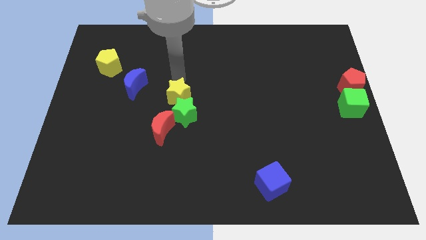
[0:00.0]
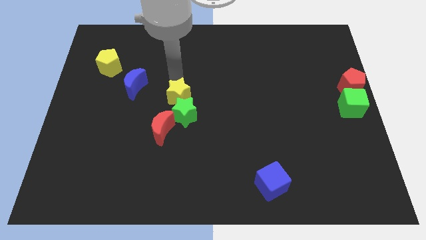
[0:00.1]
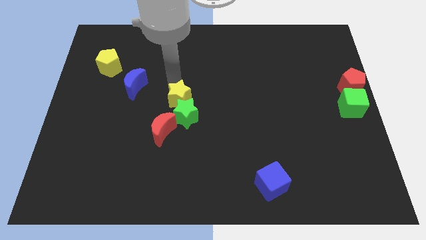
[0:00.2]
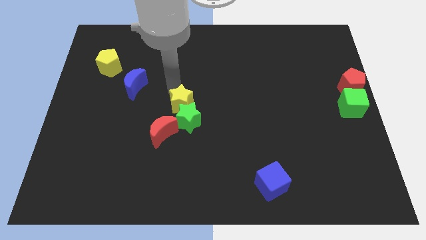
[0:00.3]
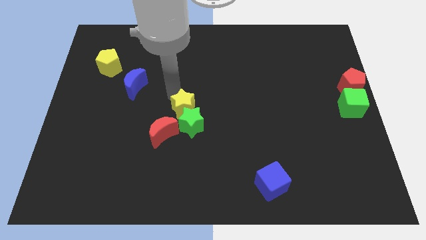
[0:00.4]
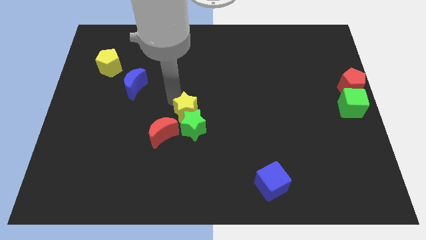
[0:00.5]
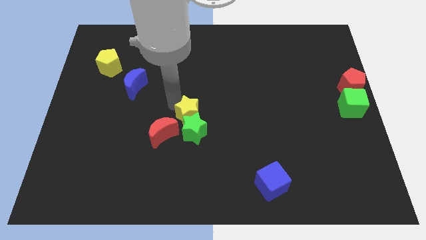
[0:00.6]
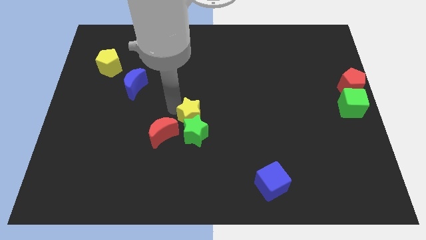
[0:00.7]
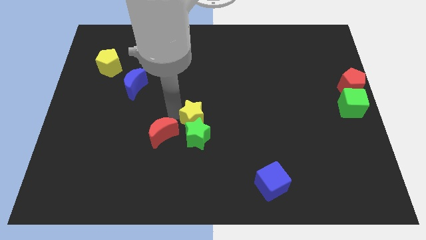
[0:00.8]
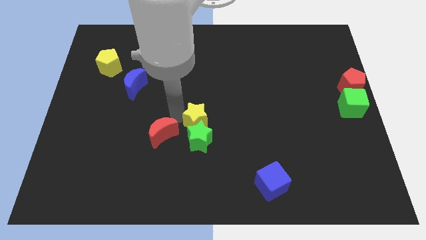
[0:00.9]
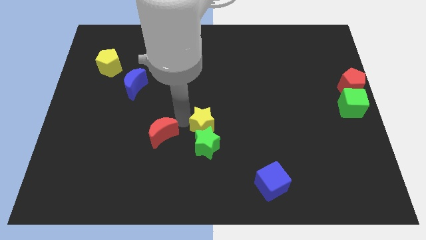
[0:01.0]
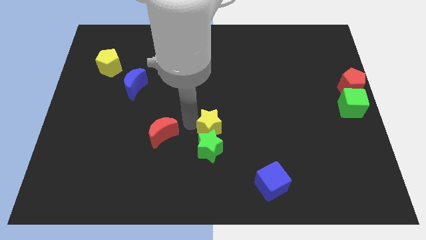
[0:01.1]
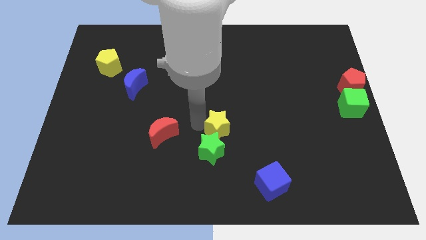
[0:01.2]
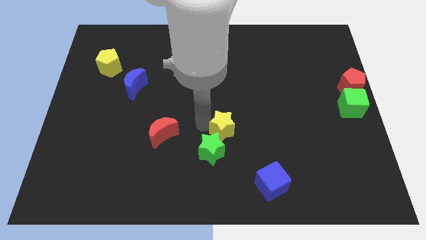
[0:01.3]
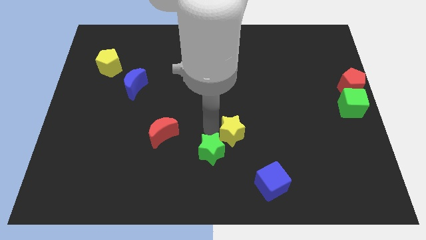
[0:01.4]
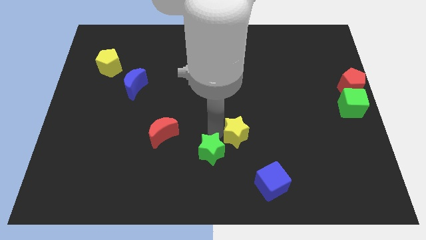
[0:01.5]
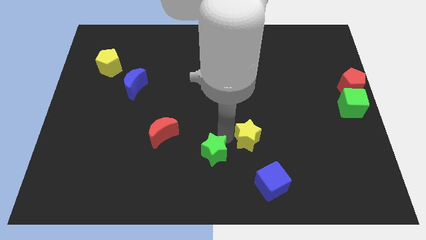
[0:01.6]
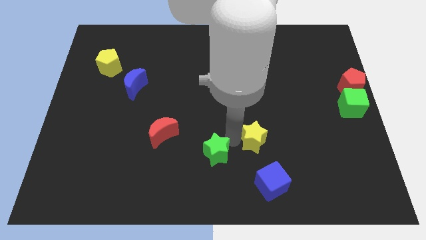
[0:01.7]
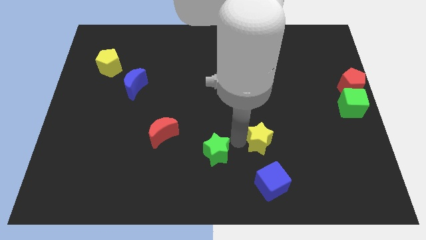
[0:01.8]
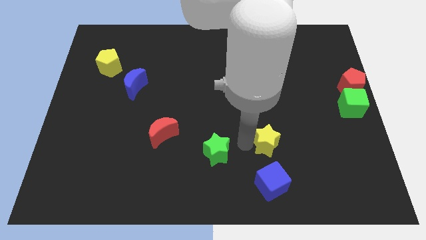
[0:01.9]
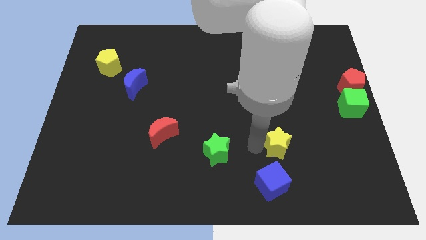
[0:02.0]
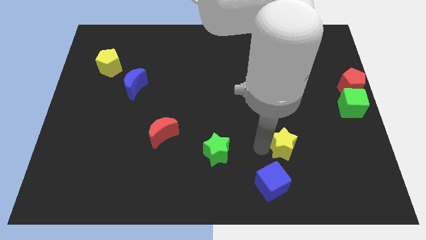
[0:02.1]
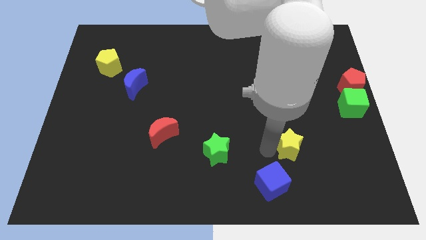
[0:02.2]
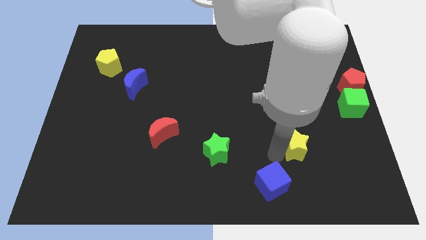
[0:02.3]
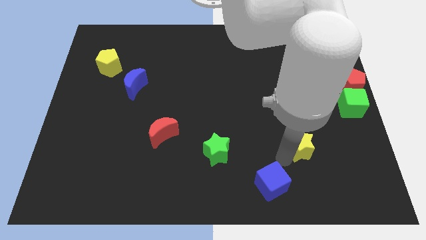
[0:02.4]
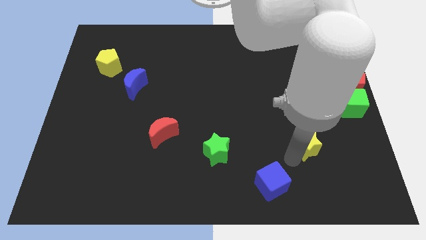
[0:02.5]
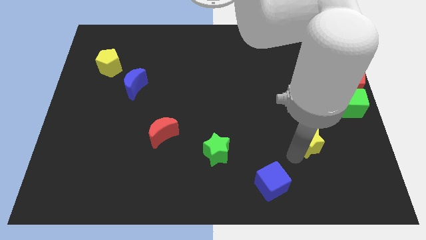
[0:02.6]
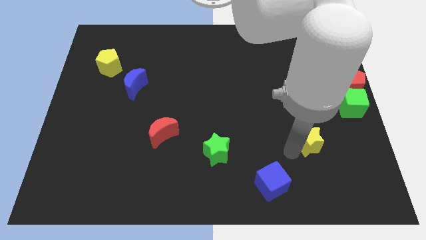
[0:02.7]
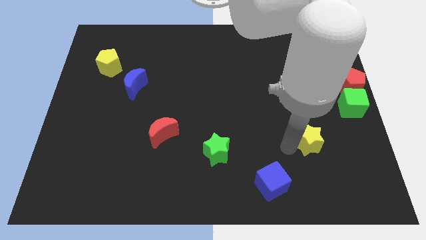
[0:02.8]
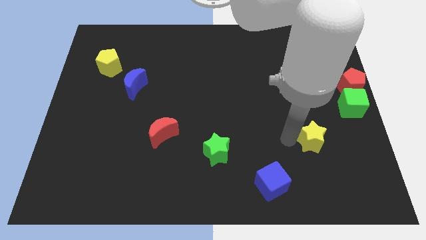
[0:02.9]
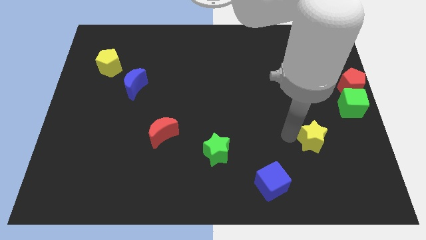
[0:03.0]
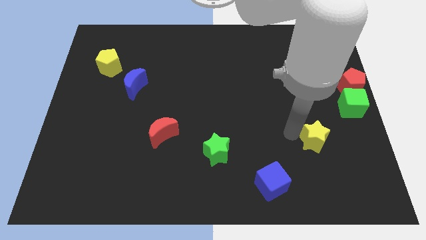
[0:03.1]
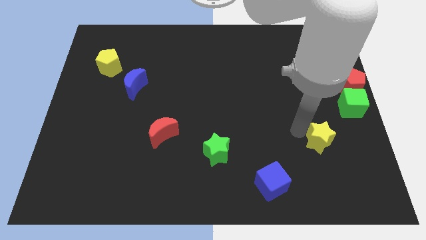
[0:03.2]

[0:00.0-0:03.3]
separate yellow star from green star

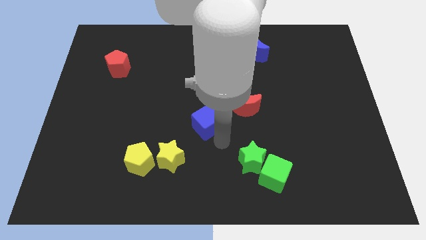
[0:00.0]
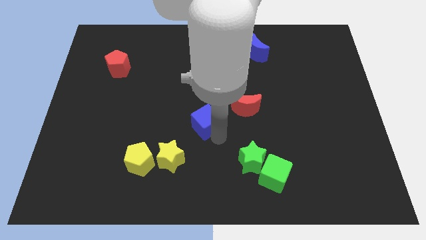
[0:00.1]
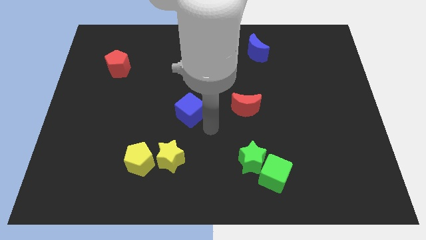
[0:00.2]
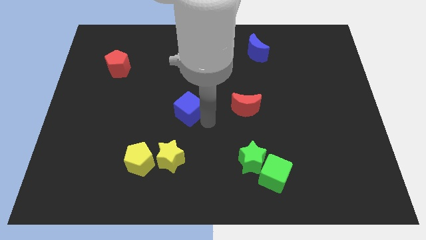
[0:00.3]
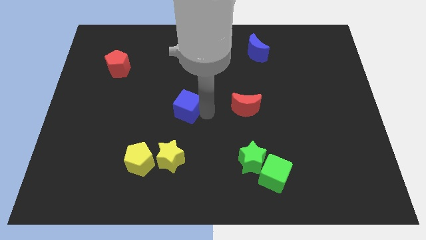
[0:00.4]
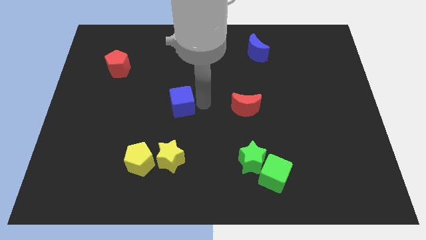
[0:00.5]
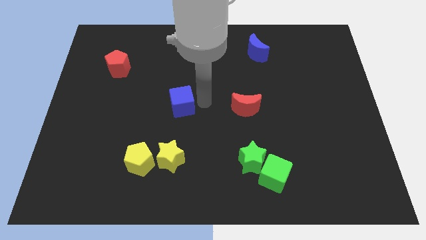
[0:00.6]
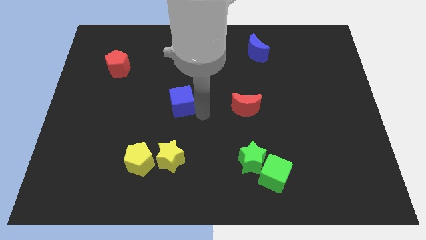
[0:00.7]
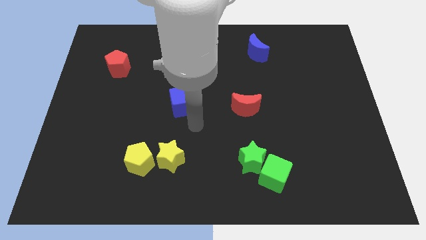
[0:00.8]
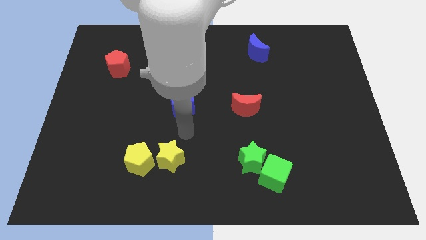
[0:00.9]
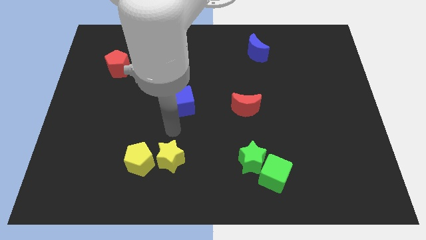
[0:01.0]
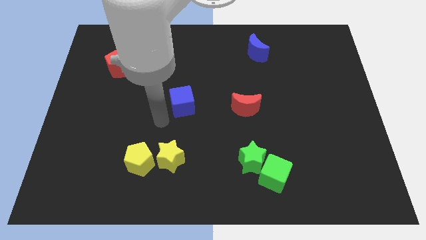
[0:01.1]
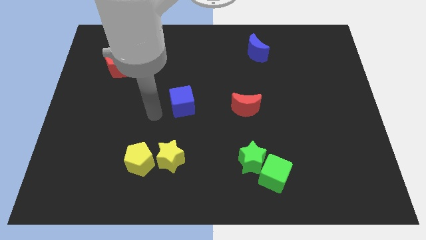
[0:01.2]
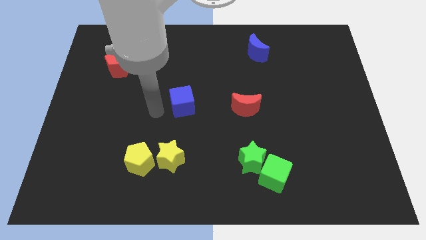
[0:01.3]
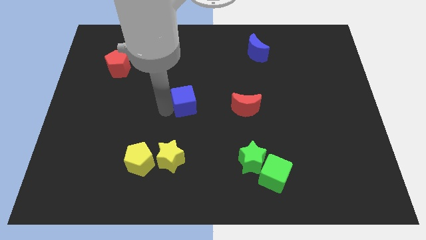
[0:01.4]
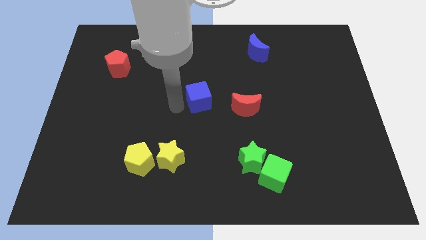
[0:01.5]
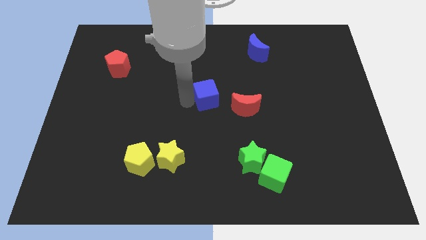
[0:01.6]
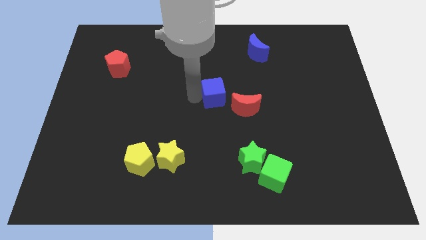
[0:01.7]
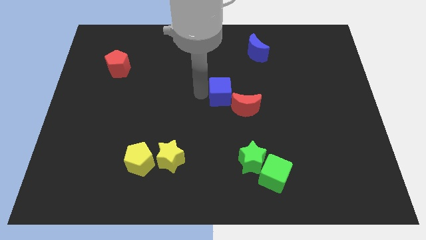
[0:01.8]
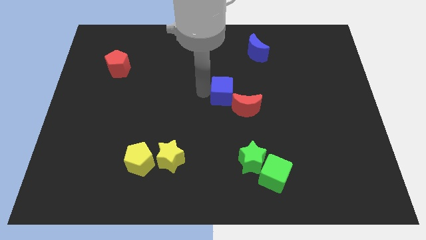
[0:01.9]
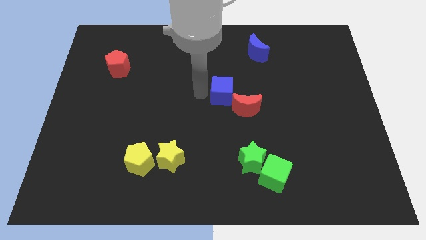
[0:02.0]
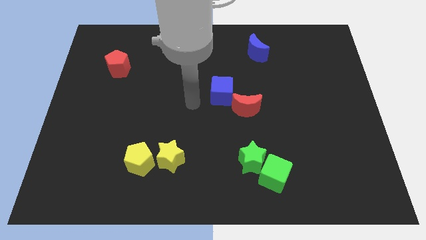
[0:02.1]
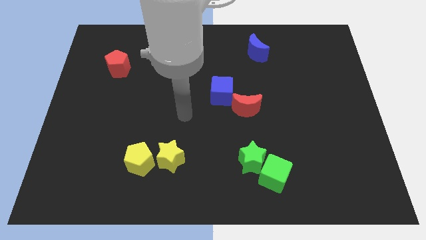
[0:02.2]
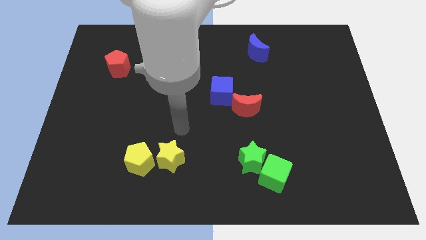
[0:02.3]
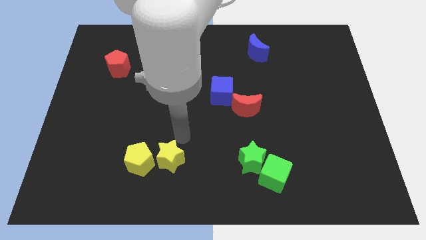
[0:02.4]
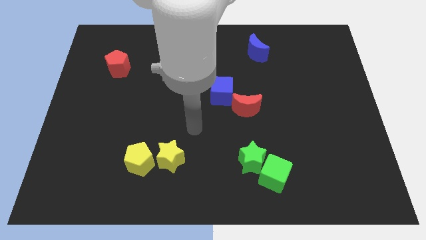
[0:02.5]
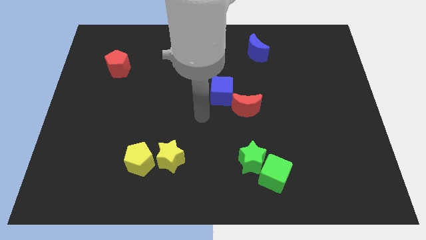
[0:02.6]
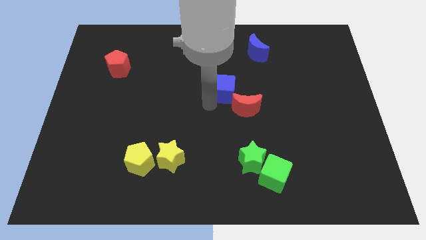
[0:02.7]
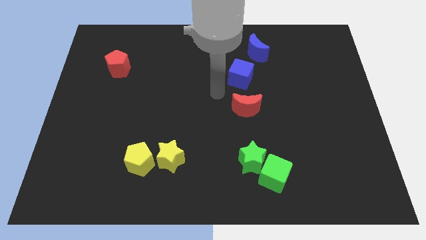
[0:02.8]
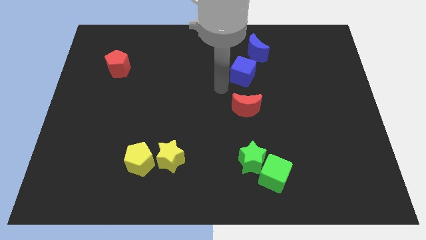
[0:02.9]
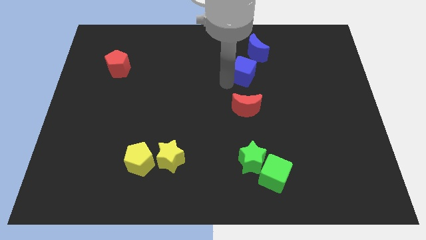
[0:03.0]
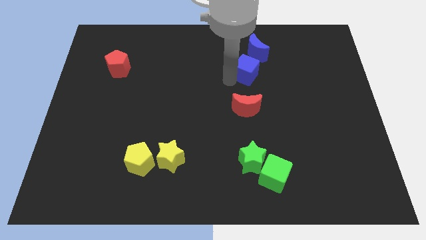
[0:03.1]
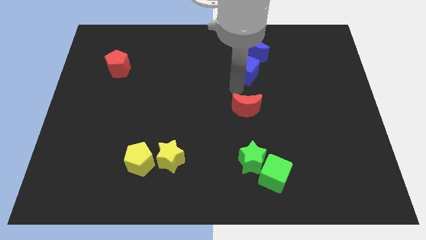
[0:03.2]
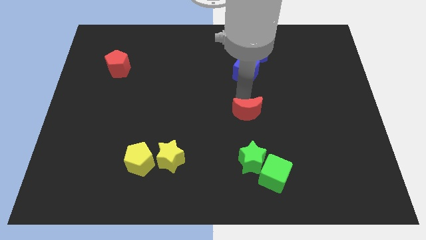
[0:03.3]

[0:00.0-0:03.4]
move the blue cube to the top of the red moon

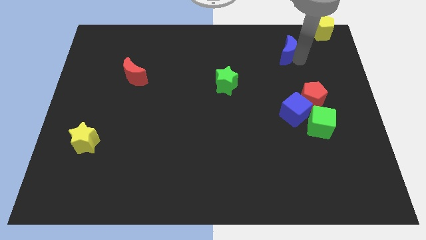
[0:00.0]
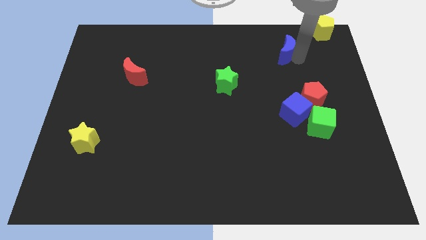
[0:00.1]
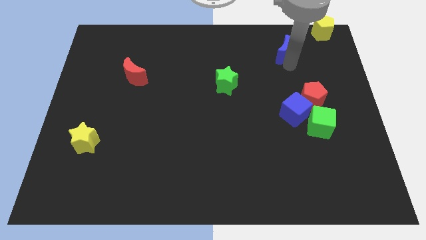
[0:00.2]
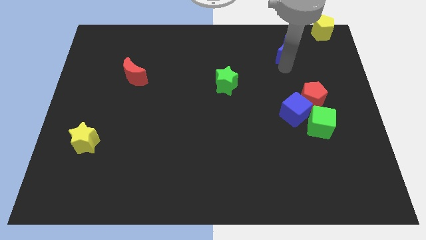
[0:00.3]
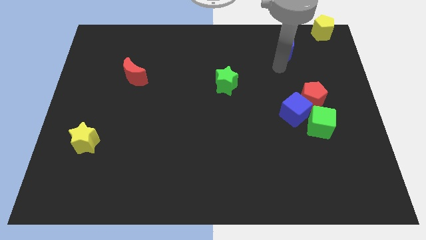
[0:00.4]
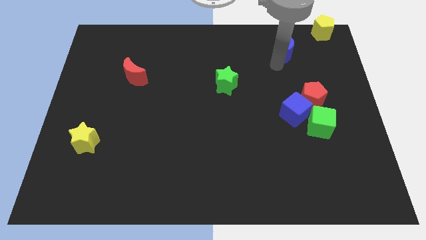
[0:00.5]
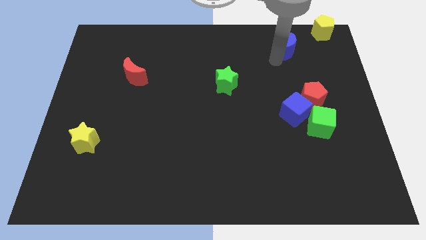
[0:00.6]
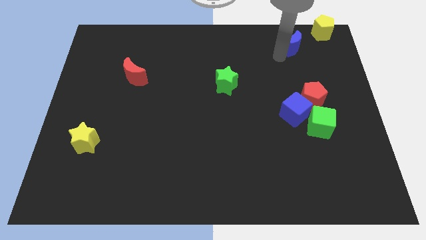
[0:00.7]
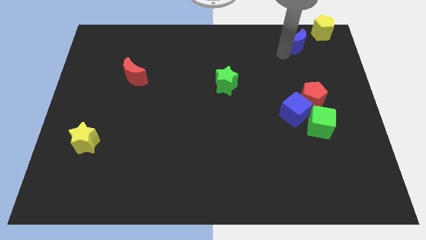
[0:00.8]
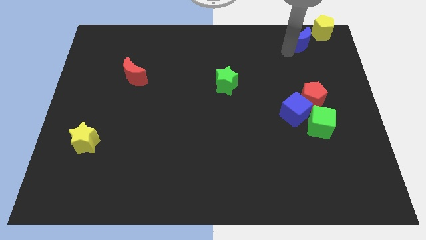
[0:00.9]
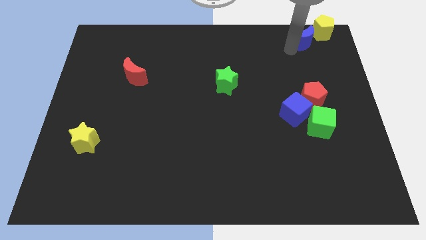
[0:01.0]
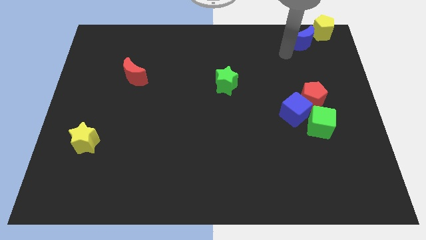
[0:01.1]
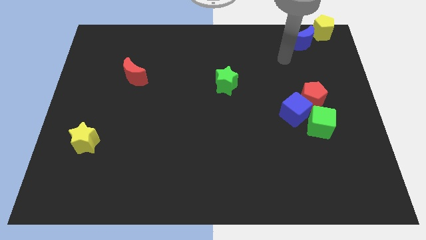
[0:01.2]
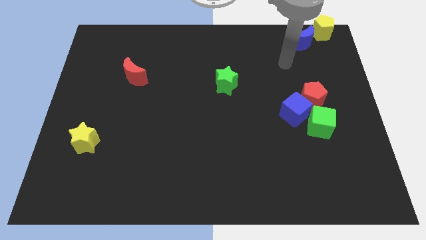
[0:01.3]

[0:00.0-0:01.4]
place blue moon to the left of yellow pentagon

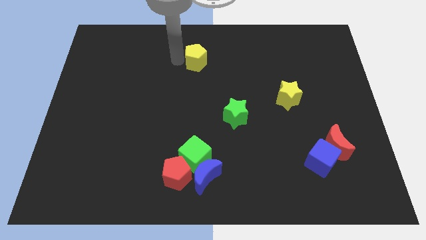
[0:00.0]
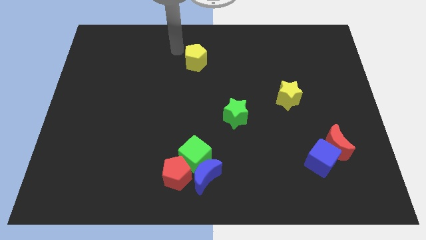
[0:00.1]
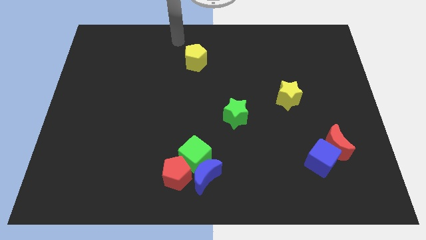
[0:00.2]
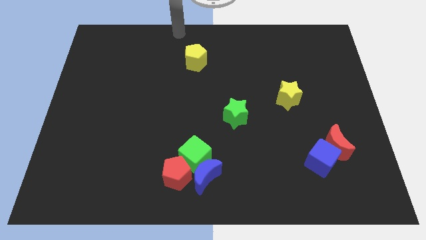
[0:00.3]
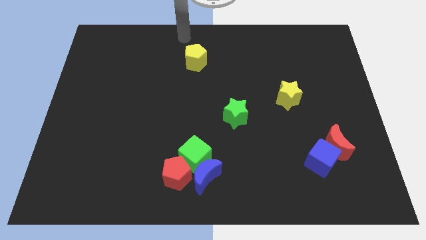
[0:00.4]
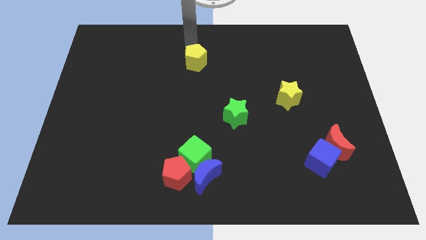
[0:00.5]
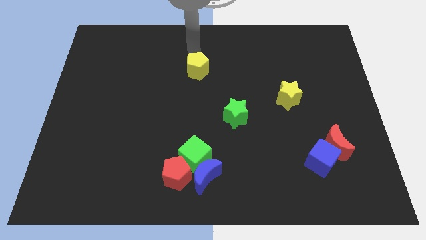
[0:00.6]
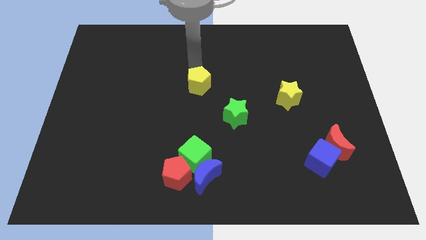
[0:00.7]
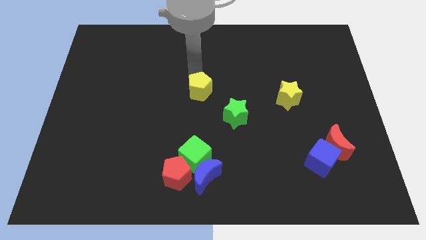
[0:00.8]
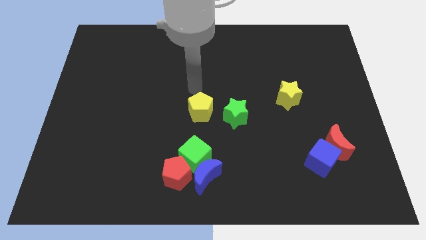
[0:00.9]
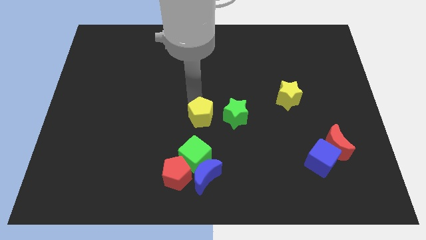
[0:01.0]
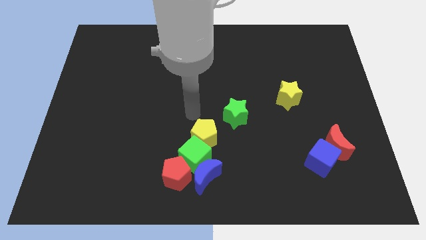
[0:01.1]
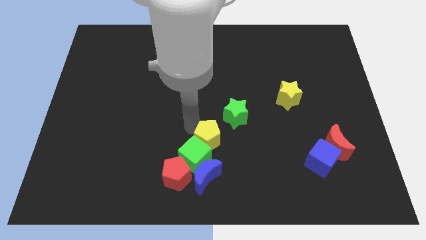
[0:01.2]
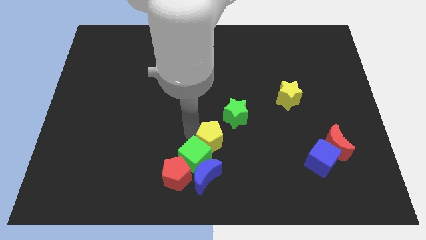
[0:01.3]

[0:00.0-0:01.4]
push the yellow pentagon into the green cube
